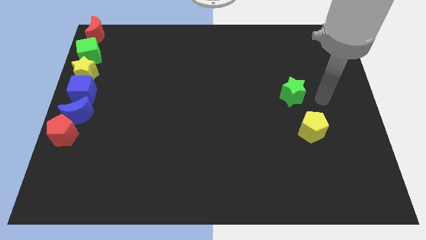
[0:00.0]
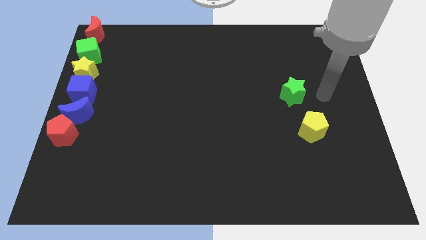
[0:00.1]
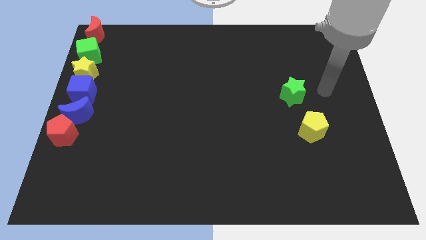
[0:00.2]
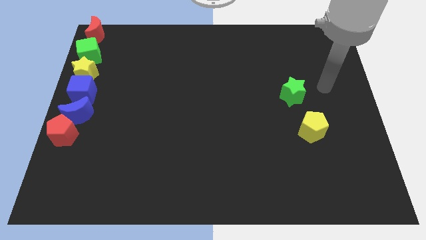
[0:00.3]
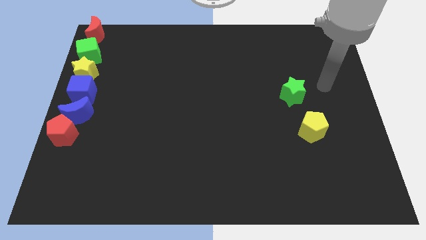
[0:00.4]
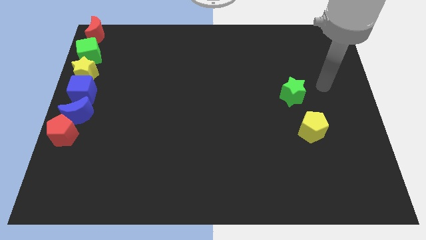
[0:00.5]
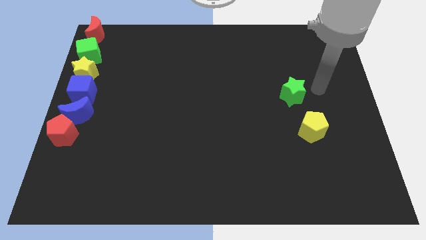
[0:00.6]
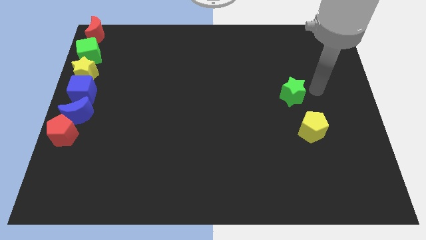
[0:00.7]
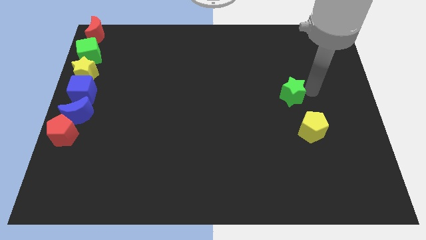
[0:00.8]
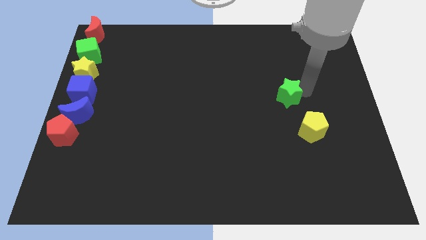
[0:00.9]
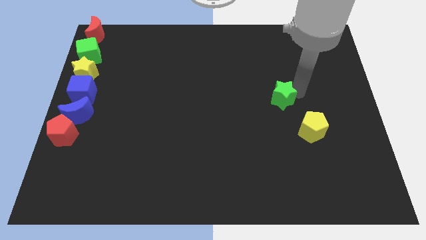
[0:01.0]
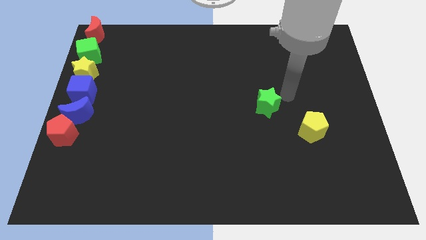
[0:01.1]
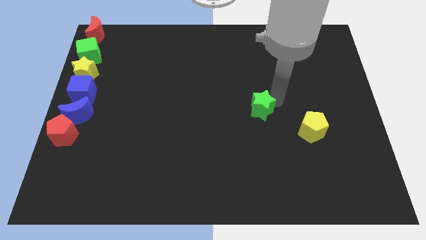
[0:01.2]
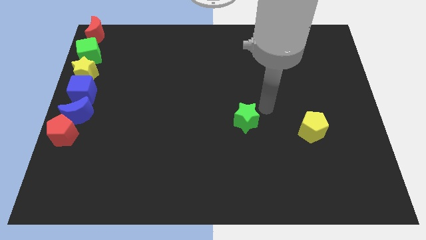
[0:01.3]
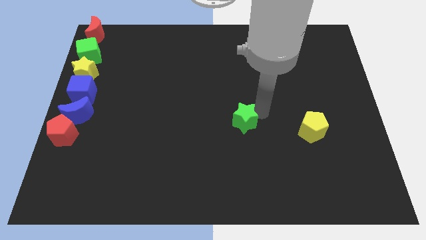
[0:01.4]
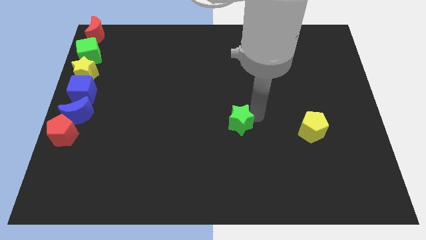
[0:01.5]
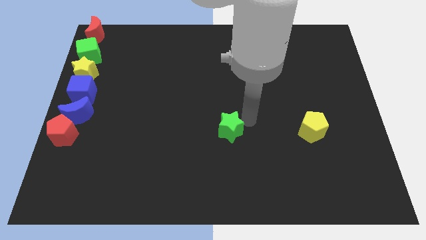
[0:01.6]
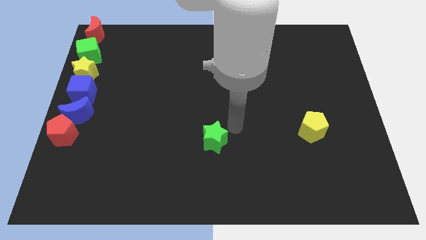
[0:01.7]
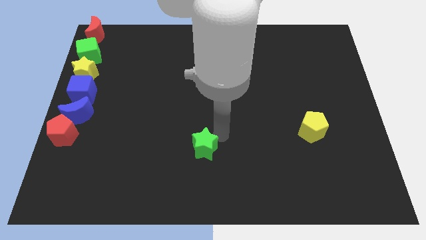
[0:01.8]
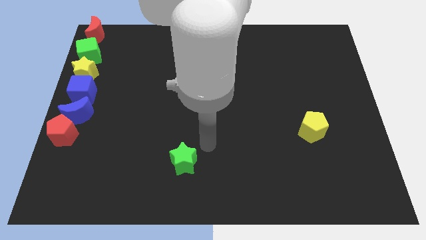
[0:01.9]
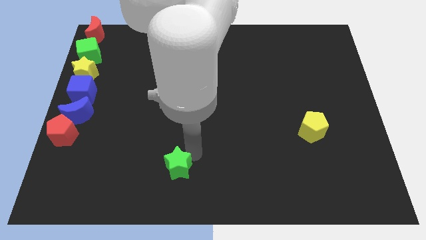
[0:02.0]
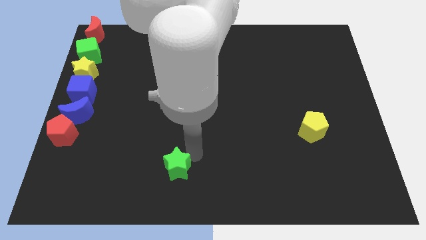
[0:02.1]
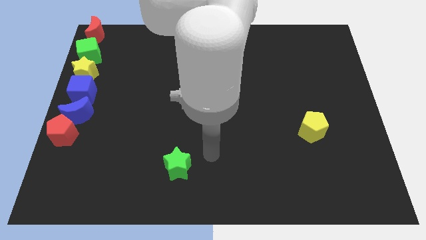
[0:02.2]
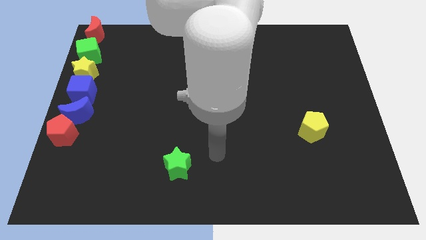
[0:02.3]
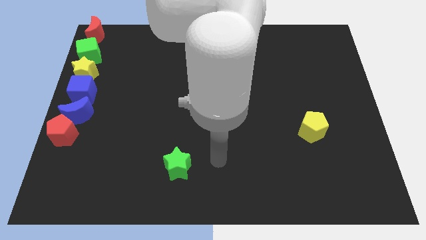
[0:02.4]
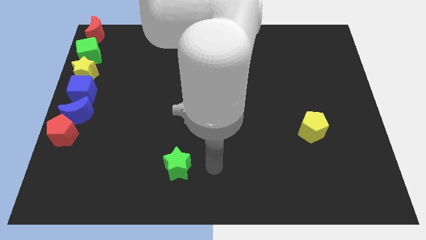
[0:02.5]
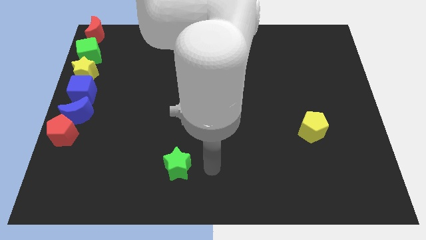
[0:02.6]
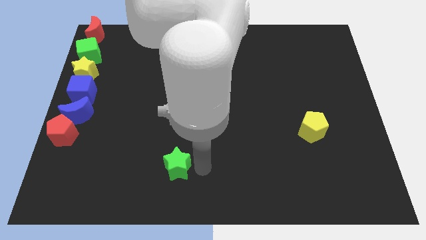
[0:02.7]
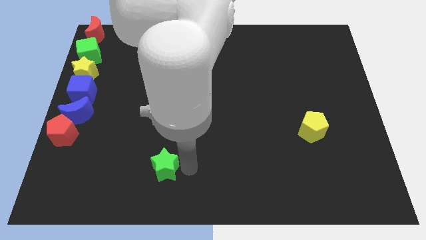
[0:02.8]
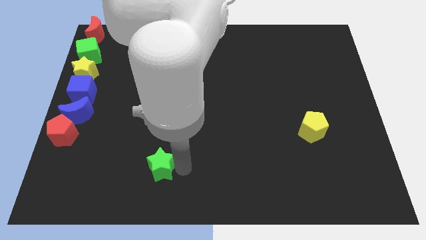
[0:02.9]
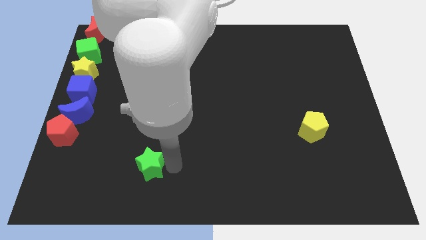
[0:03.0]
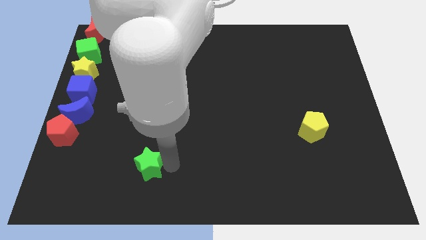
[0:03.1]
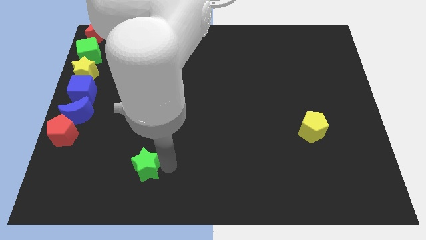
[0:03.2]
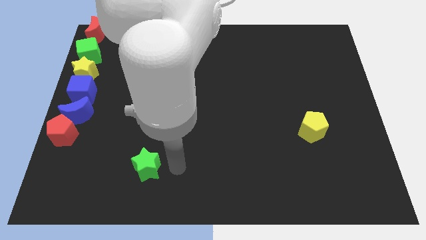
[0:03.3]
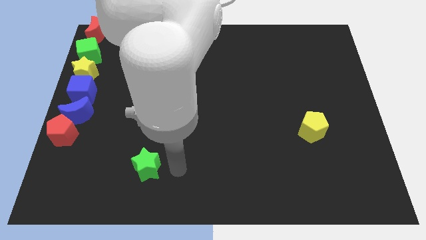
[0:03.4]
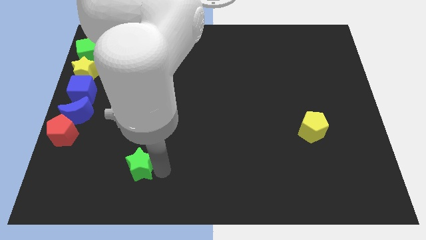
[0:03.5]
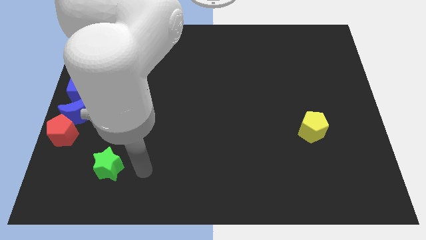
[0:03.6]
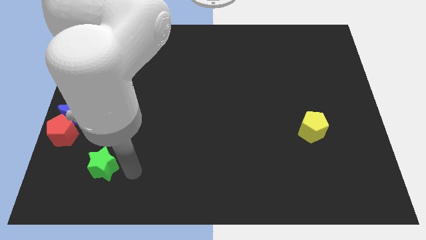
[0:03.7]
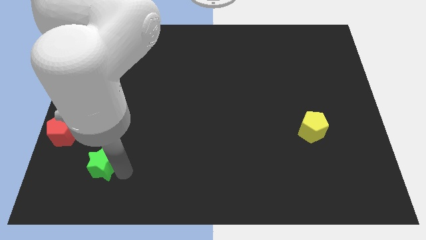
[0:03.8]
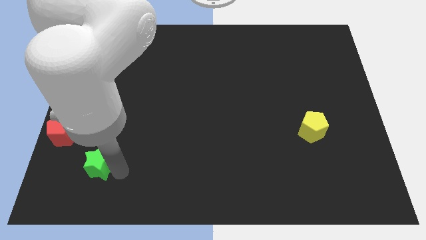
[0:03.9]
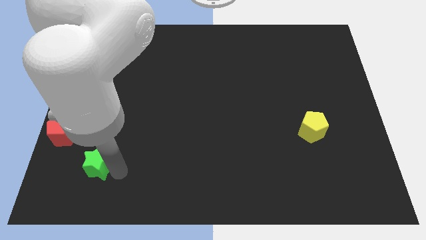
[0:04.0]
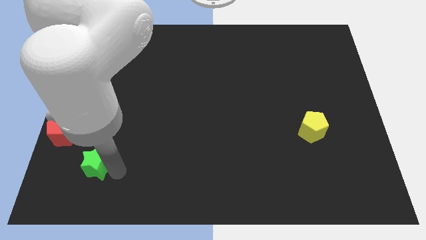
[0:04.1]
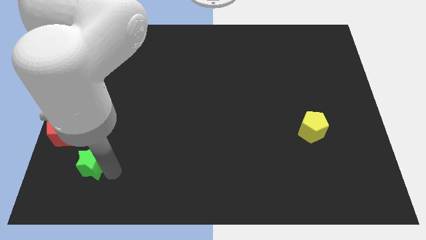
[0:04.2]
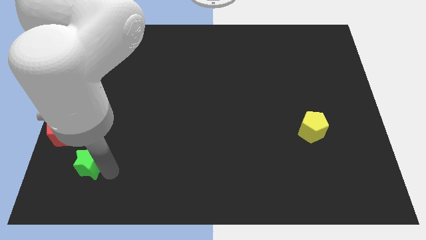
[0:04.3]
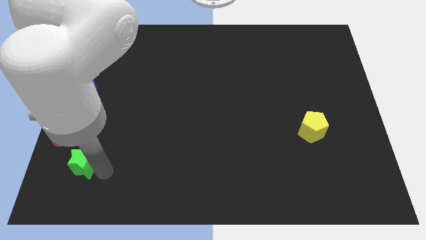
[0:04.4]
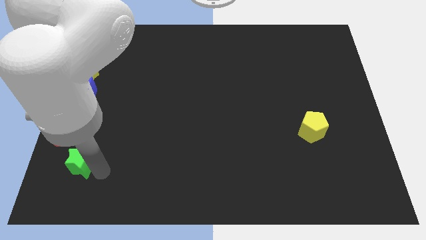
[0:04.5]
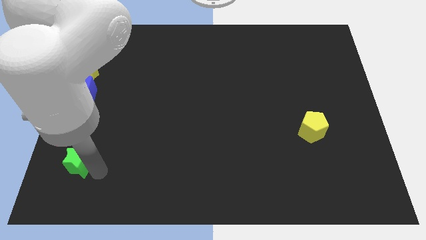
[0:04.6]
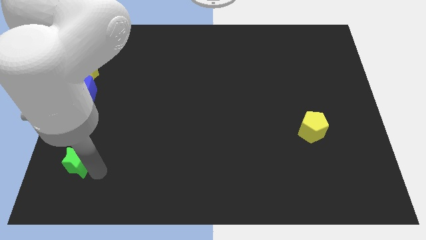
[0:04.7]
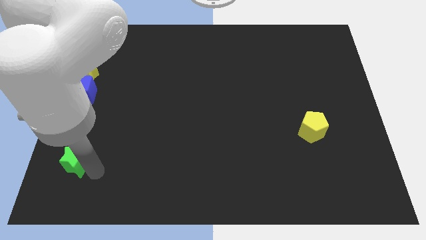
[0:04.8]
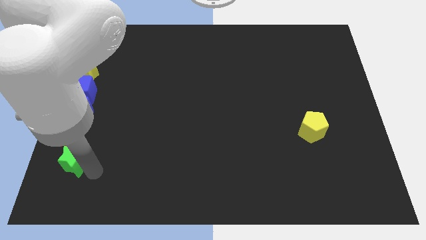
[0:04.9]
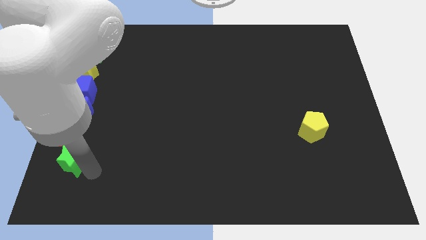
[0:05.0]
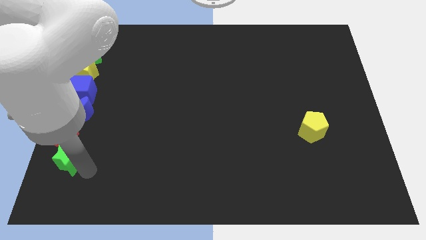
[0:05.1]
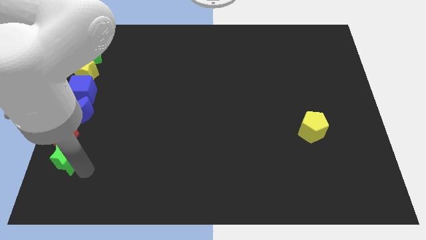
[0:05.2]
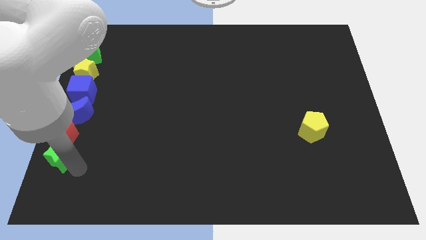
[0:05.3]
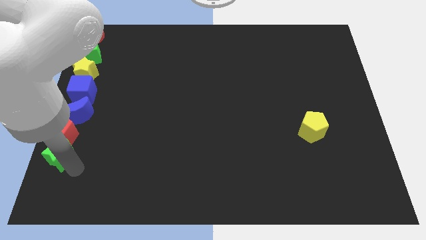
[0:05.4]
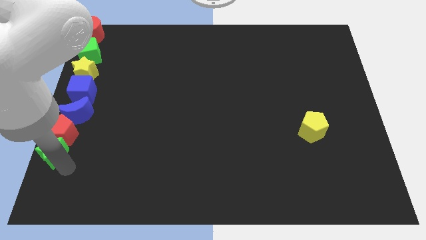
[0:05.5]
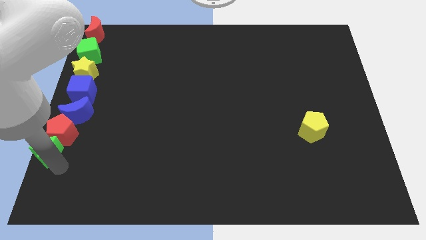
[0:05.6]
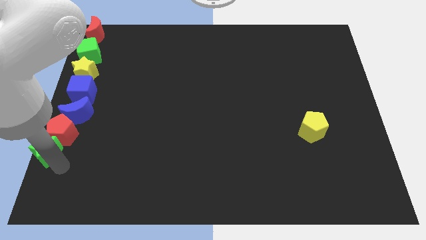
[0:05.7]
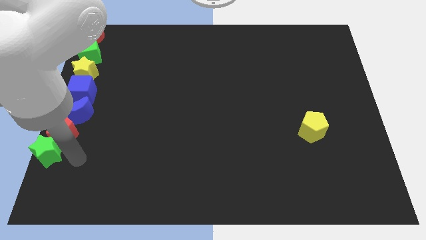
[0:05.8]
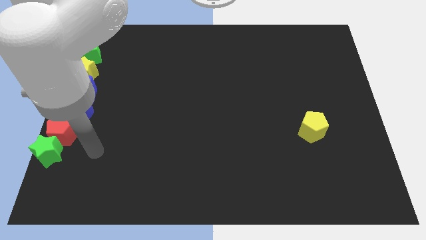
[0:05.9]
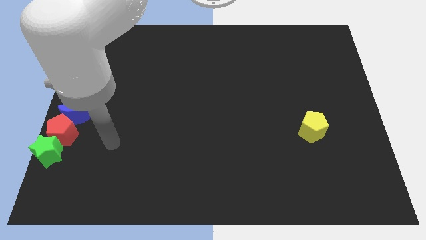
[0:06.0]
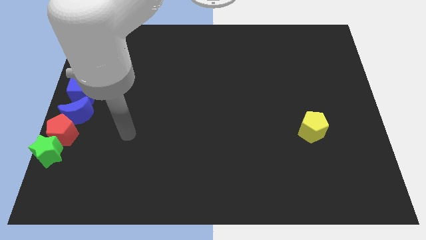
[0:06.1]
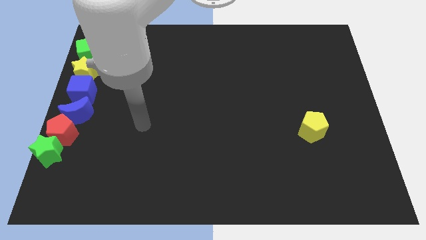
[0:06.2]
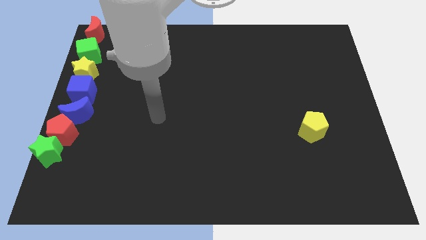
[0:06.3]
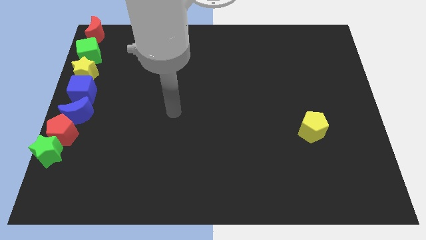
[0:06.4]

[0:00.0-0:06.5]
place the green star below the red pentagon

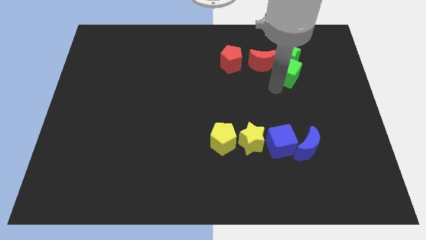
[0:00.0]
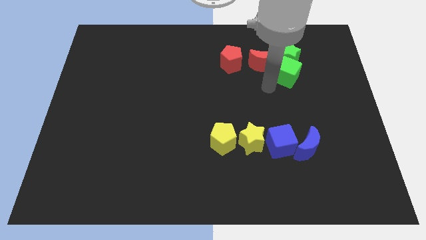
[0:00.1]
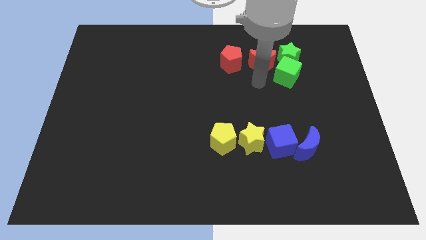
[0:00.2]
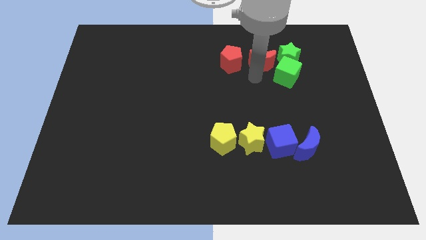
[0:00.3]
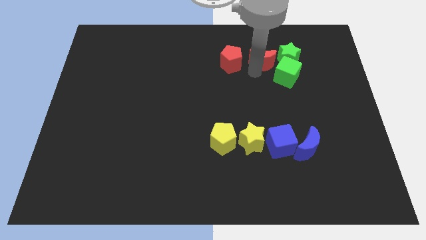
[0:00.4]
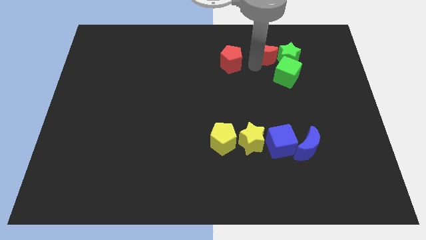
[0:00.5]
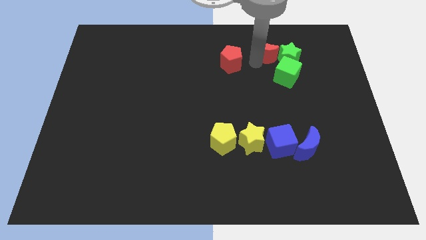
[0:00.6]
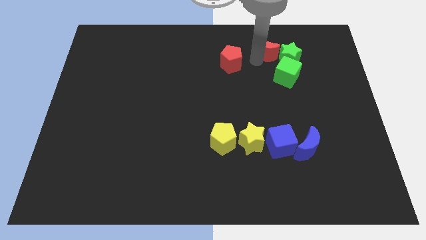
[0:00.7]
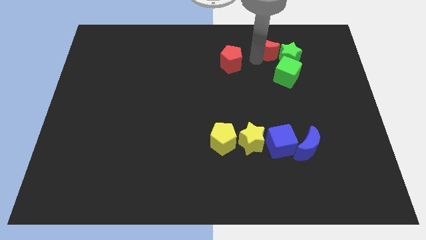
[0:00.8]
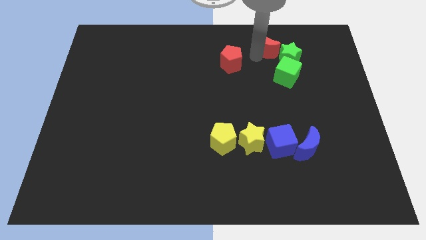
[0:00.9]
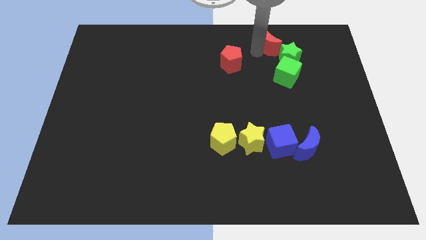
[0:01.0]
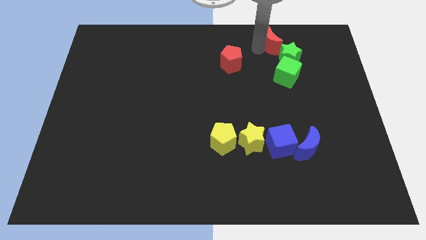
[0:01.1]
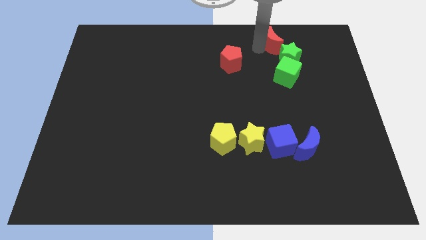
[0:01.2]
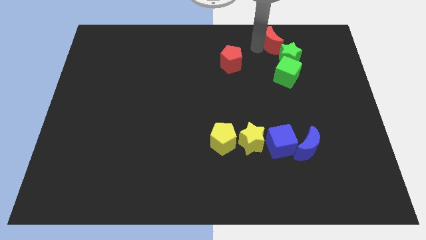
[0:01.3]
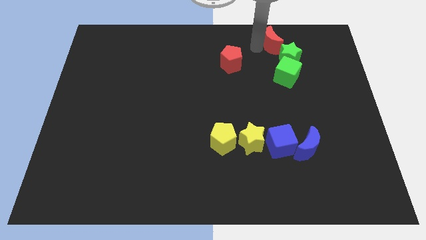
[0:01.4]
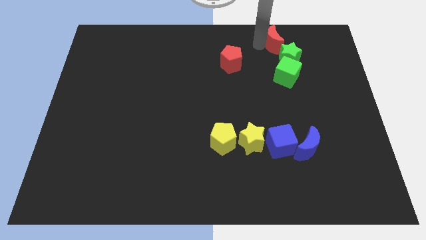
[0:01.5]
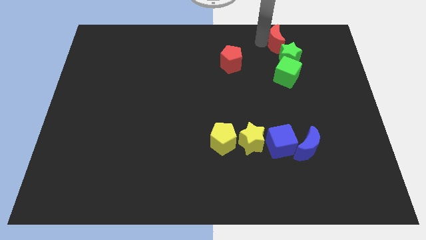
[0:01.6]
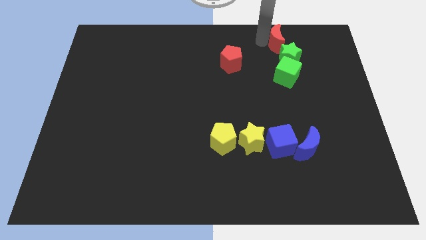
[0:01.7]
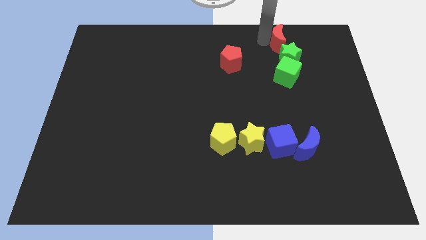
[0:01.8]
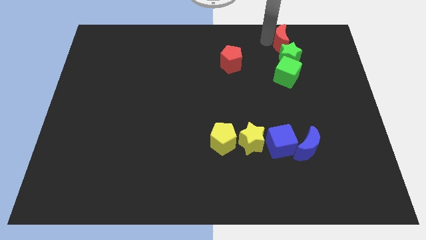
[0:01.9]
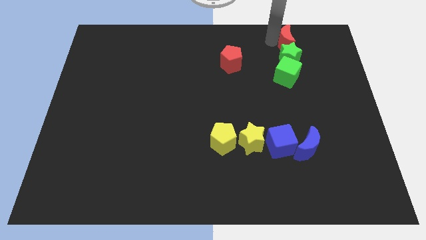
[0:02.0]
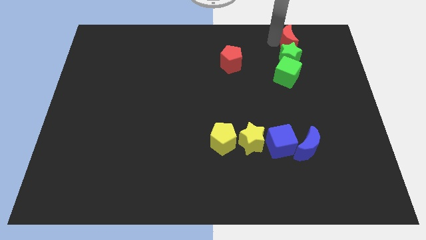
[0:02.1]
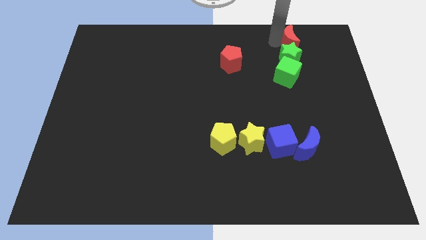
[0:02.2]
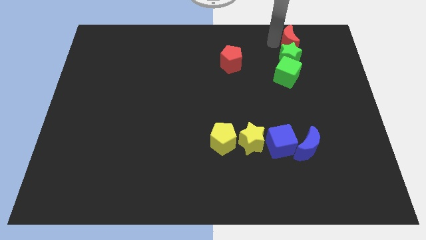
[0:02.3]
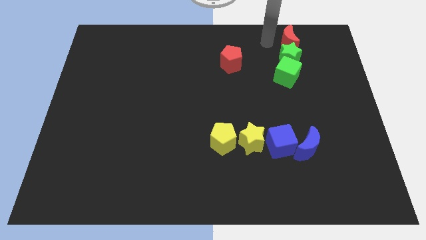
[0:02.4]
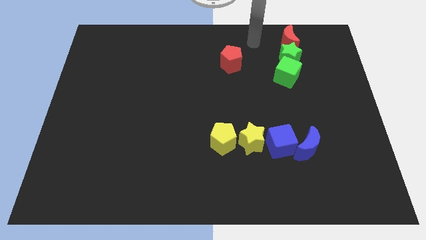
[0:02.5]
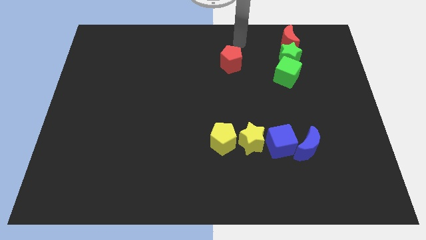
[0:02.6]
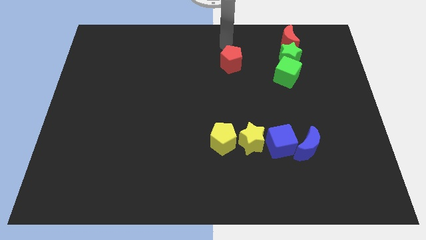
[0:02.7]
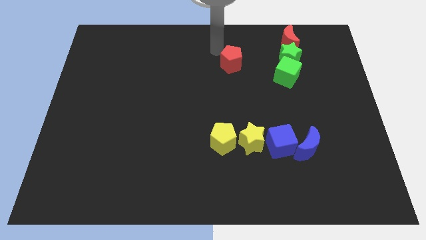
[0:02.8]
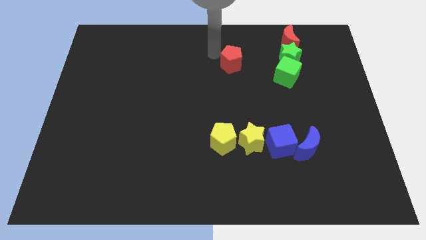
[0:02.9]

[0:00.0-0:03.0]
move the red crescent at the top of the green star
